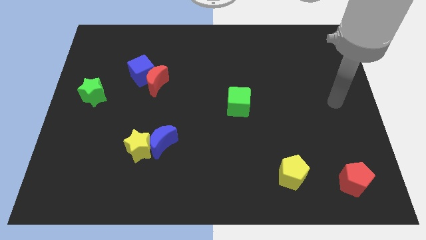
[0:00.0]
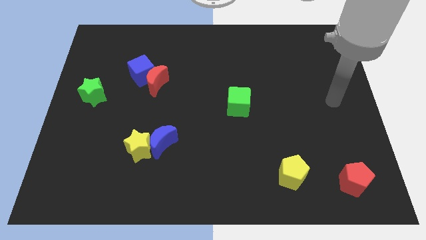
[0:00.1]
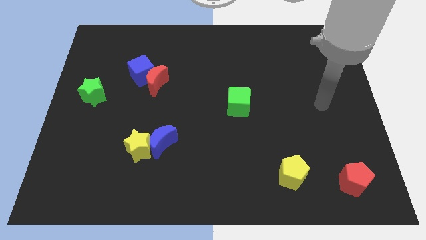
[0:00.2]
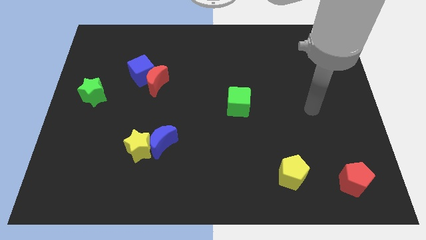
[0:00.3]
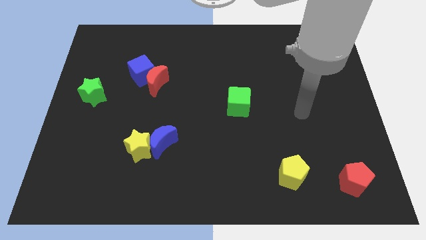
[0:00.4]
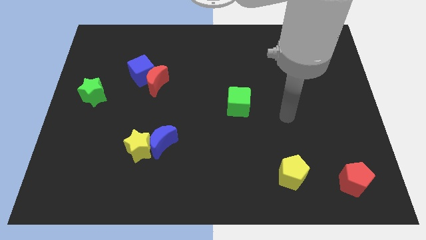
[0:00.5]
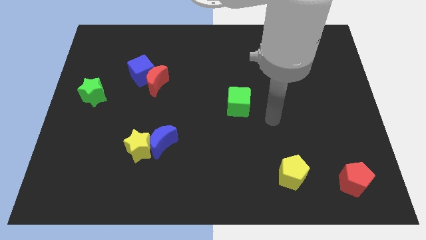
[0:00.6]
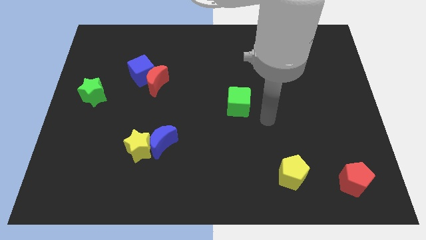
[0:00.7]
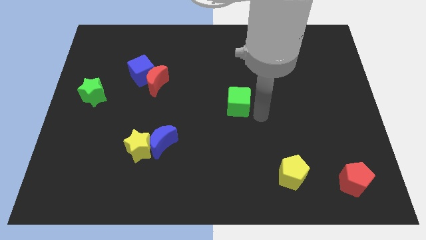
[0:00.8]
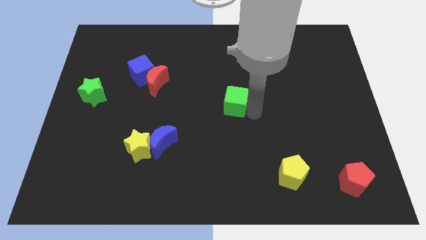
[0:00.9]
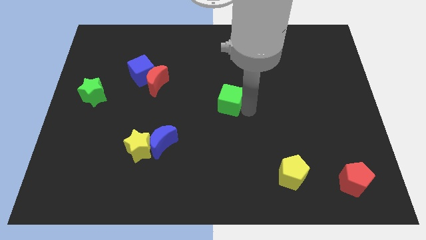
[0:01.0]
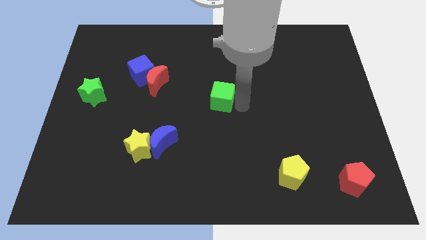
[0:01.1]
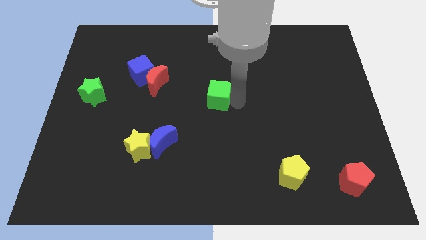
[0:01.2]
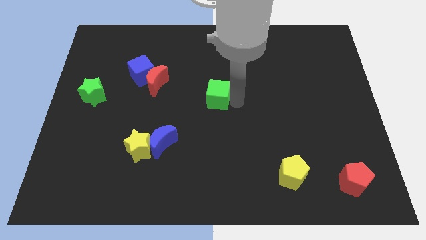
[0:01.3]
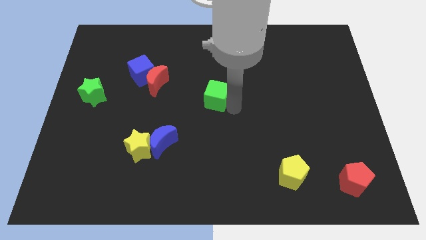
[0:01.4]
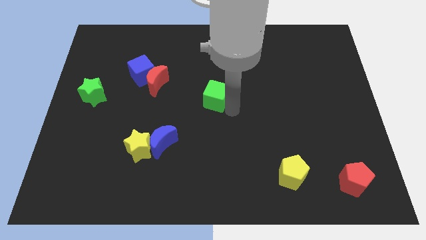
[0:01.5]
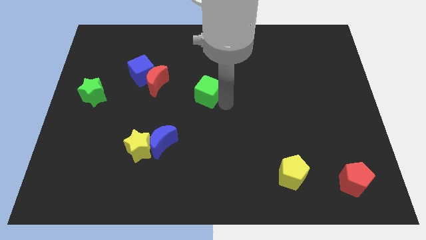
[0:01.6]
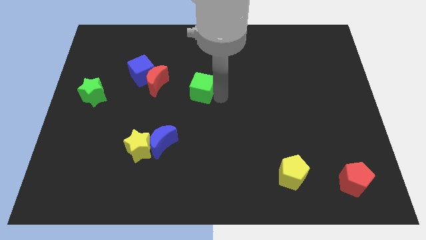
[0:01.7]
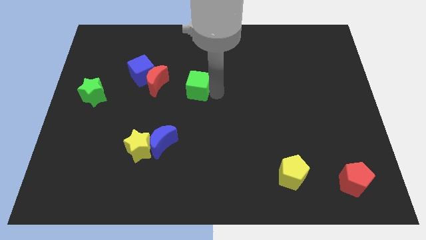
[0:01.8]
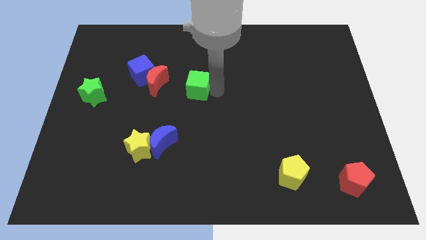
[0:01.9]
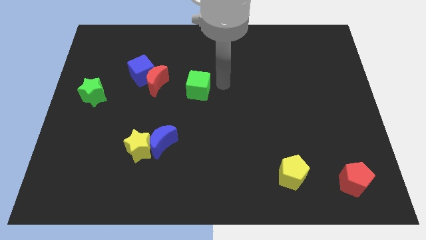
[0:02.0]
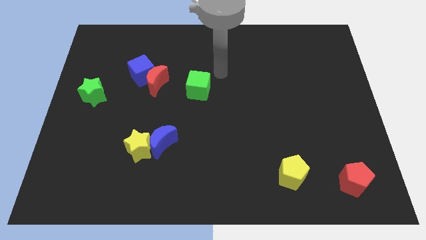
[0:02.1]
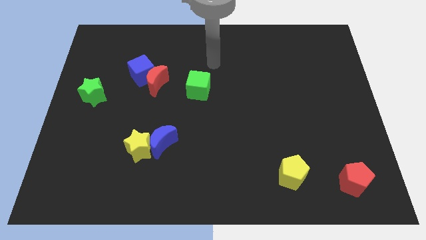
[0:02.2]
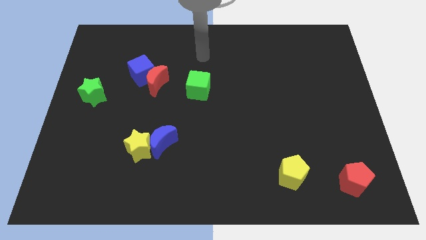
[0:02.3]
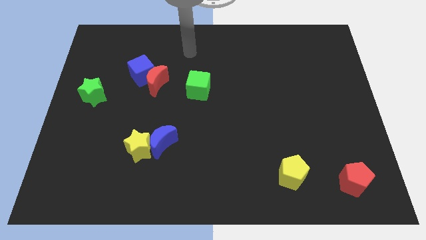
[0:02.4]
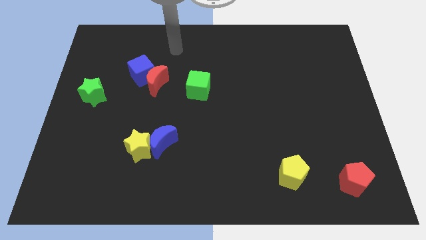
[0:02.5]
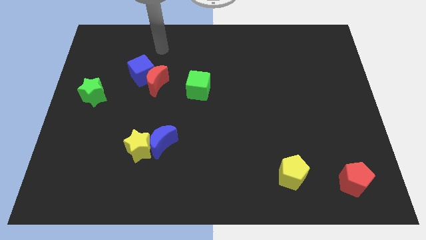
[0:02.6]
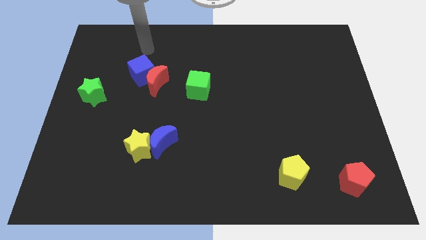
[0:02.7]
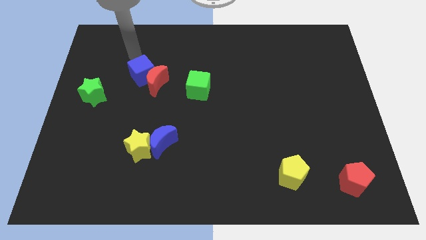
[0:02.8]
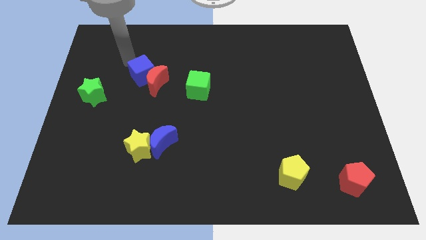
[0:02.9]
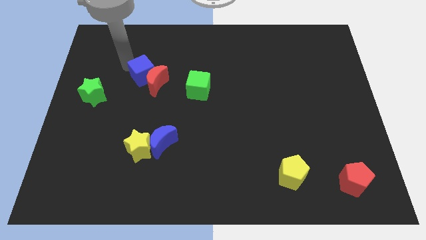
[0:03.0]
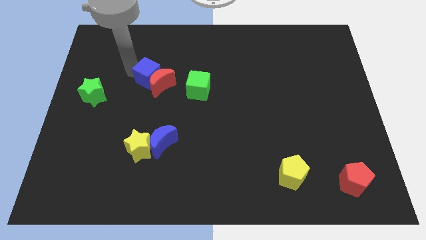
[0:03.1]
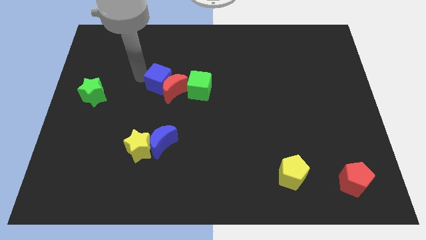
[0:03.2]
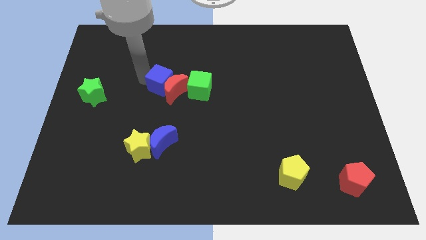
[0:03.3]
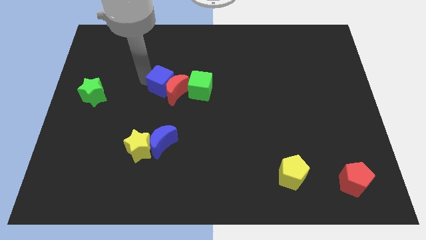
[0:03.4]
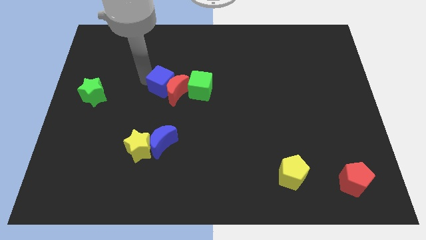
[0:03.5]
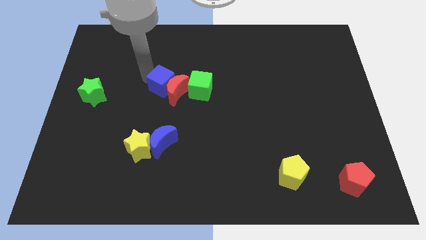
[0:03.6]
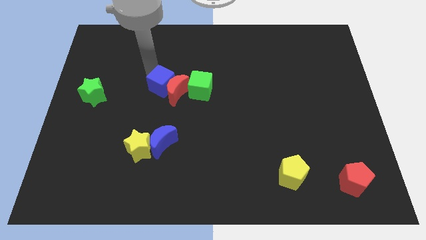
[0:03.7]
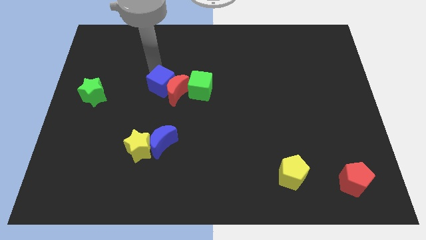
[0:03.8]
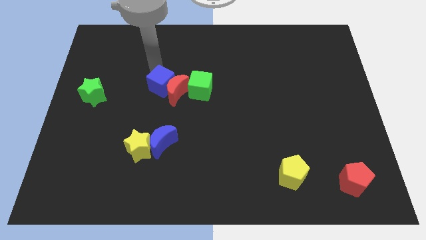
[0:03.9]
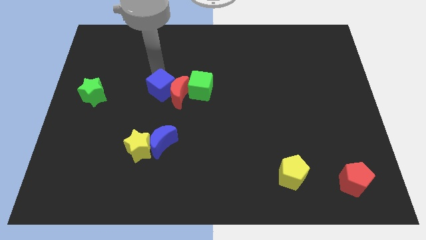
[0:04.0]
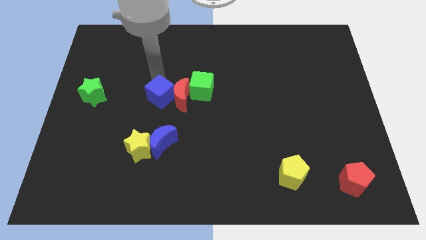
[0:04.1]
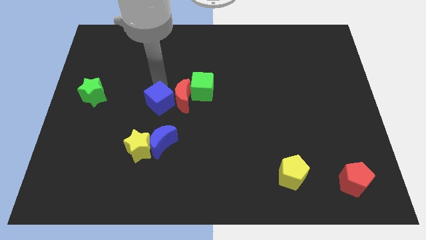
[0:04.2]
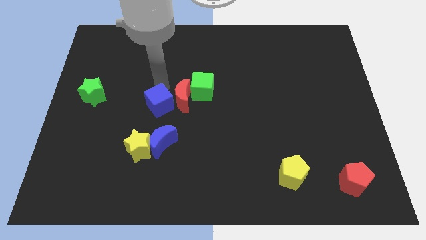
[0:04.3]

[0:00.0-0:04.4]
push the blue and red blocks into the green cube

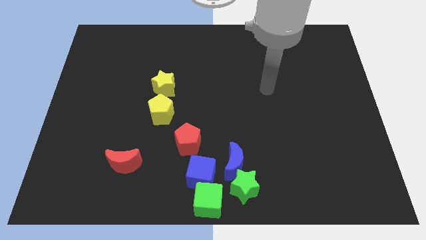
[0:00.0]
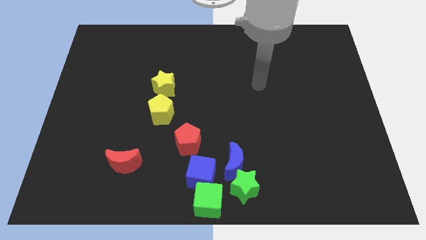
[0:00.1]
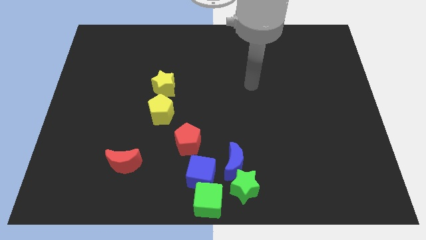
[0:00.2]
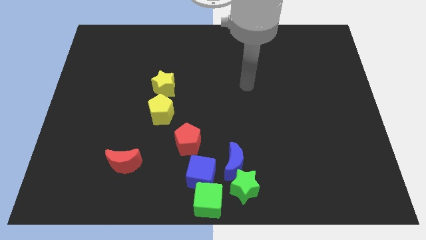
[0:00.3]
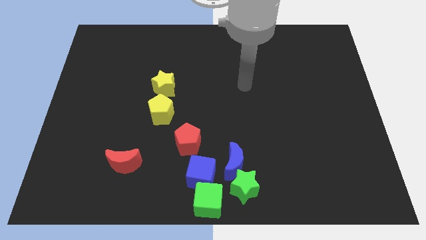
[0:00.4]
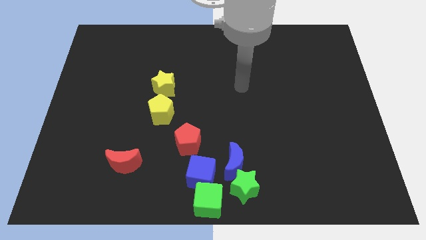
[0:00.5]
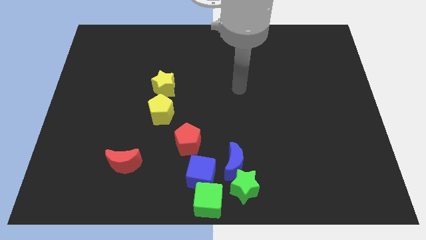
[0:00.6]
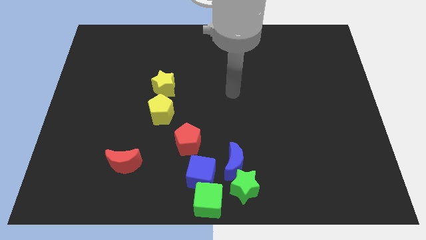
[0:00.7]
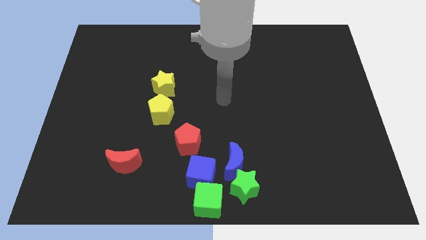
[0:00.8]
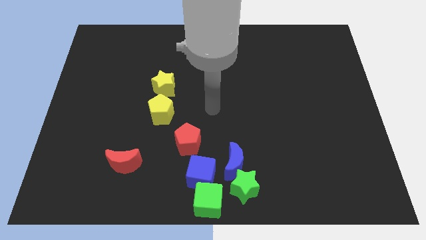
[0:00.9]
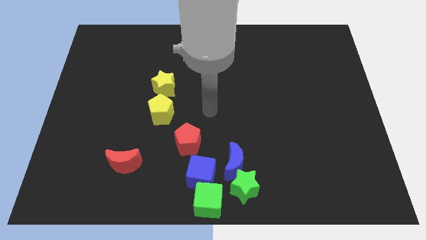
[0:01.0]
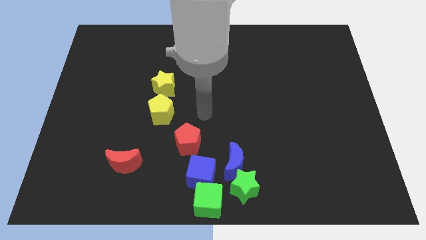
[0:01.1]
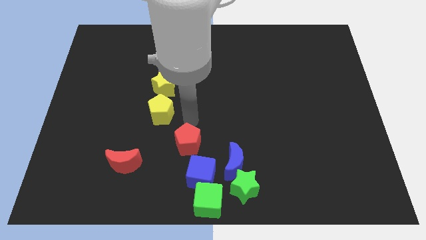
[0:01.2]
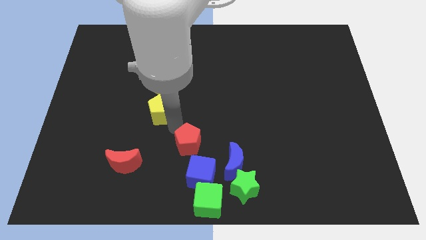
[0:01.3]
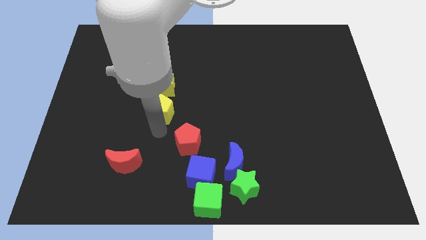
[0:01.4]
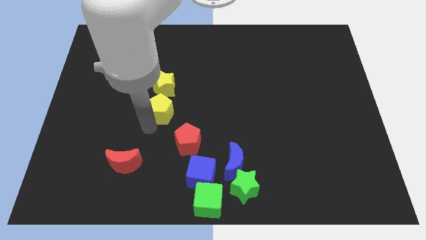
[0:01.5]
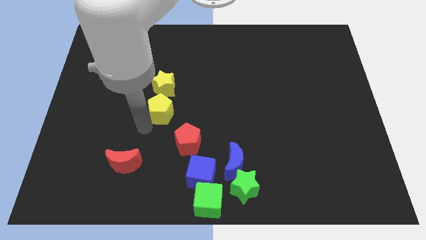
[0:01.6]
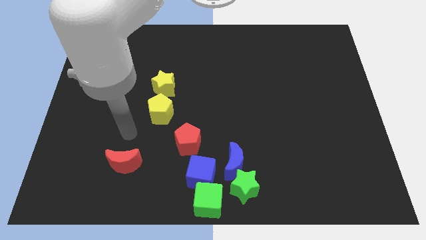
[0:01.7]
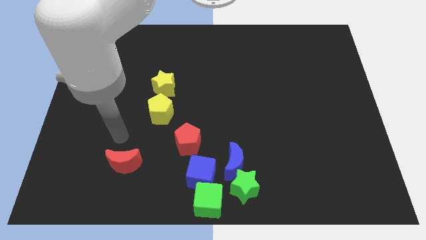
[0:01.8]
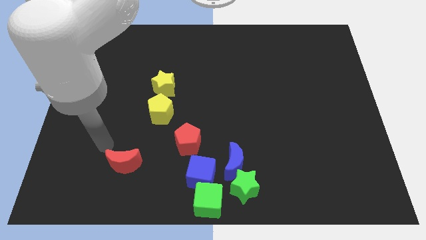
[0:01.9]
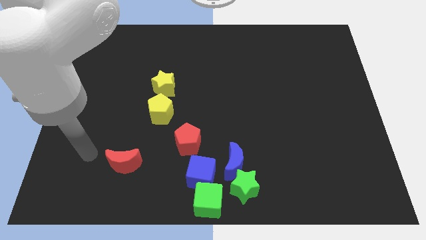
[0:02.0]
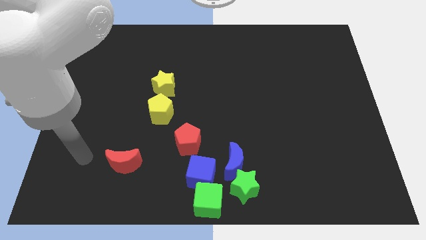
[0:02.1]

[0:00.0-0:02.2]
move your arm to the left of the red crescent

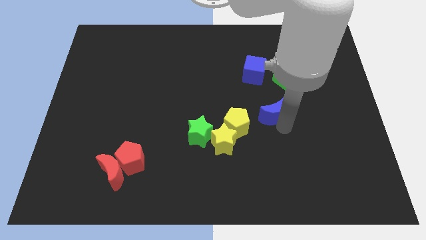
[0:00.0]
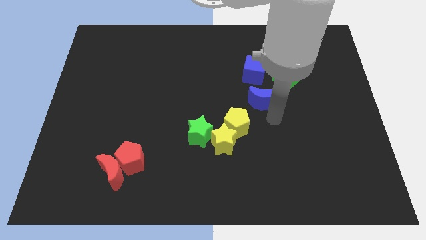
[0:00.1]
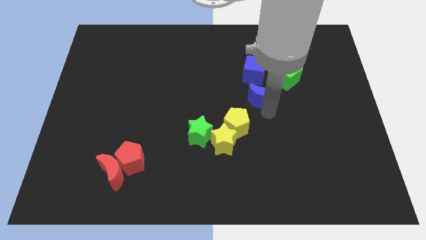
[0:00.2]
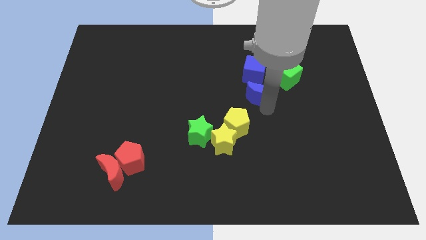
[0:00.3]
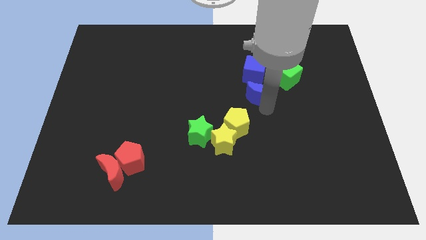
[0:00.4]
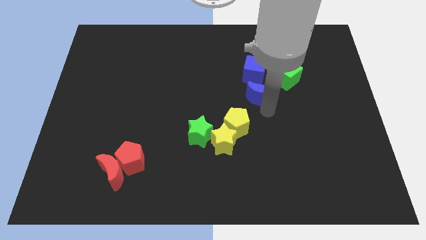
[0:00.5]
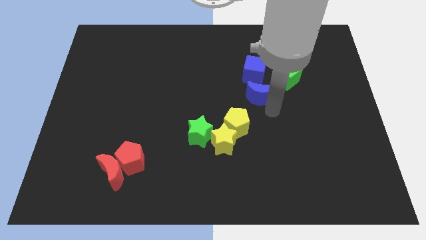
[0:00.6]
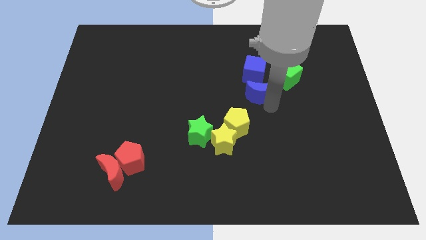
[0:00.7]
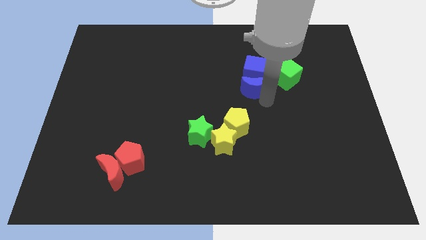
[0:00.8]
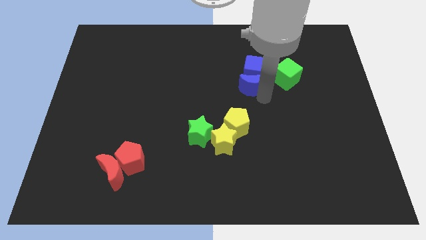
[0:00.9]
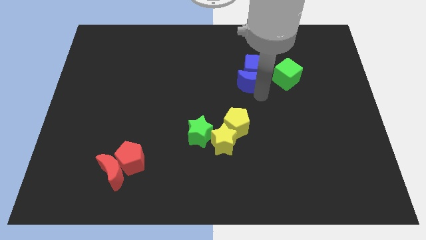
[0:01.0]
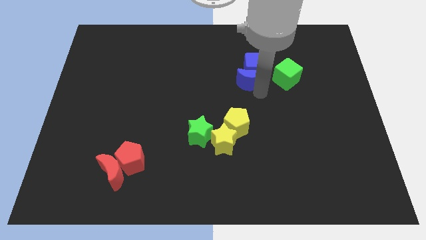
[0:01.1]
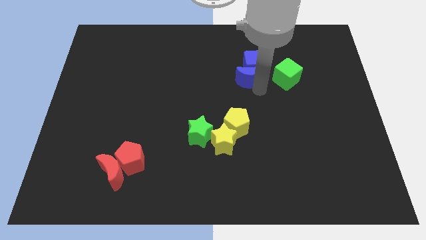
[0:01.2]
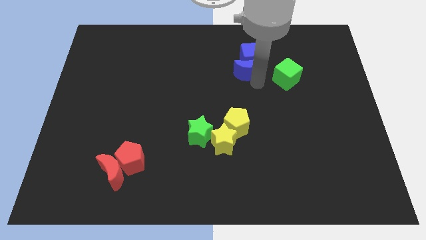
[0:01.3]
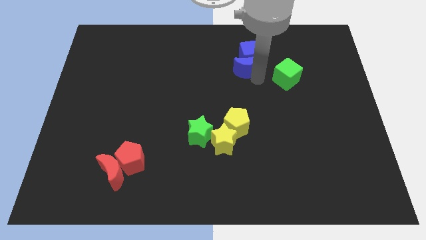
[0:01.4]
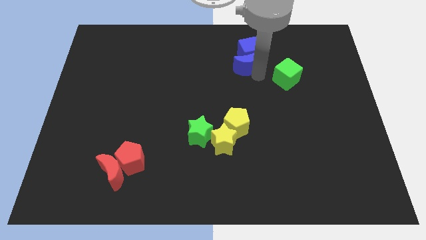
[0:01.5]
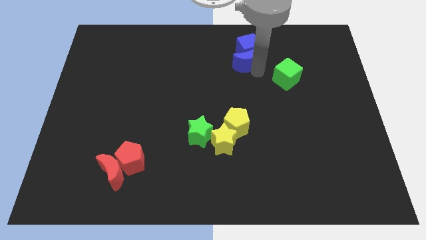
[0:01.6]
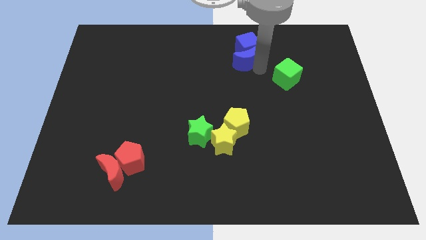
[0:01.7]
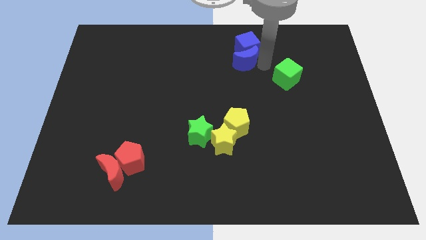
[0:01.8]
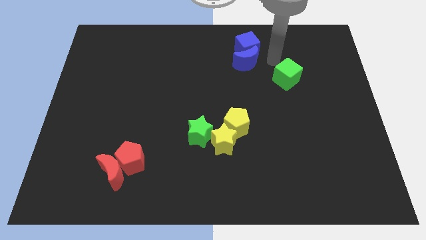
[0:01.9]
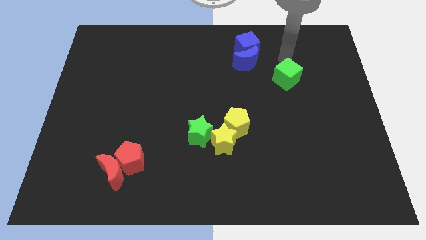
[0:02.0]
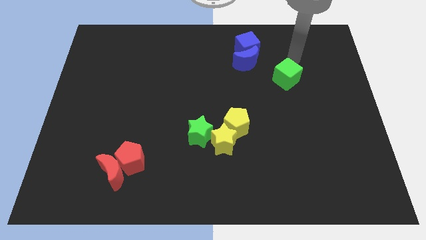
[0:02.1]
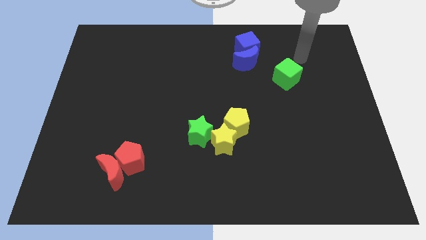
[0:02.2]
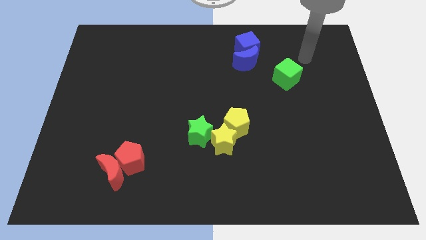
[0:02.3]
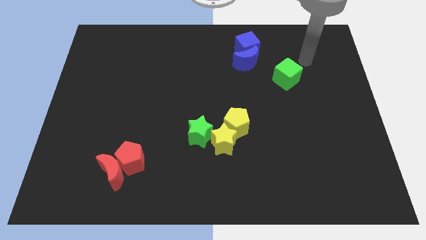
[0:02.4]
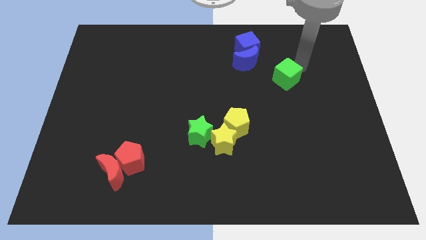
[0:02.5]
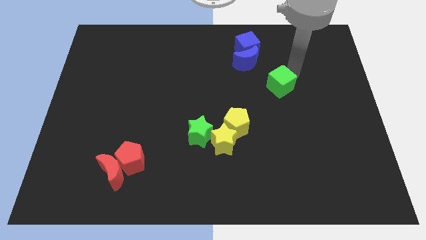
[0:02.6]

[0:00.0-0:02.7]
take the blue blocks together towards the top side of the board
